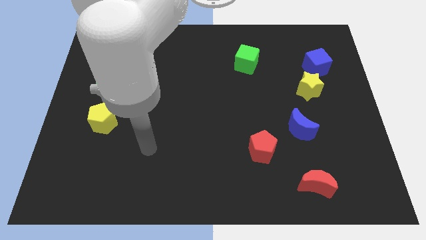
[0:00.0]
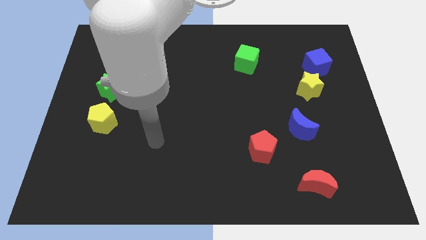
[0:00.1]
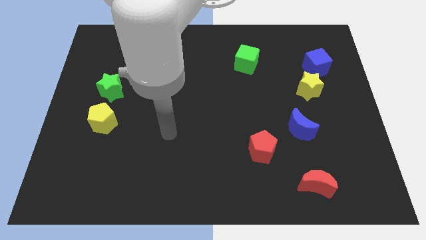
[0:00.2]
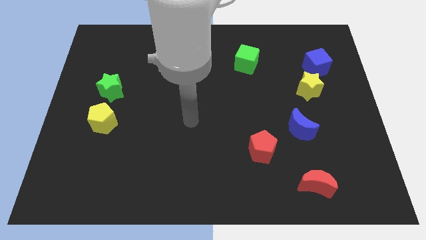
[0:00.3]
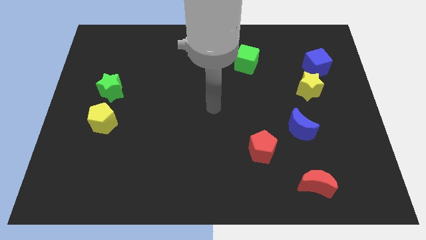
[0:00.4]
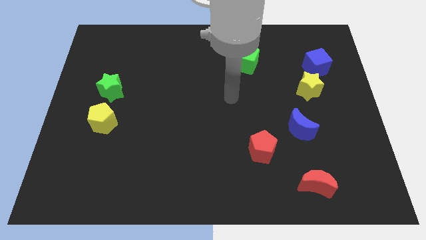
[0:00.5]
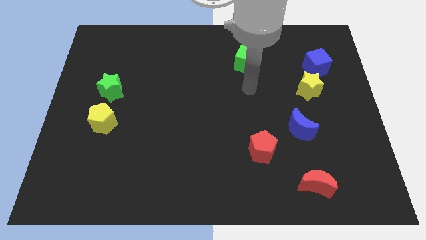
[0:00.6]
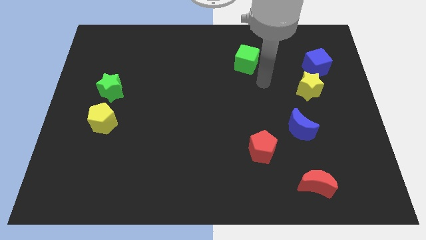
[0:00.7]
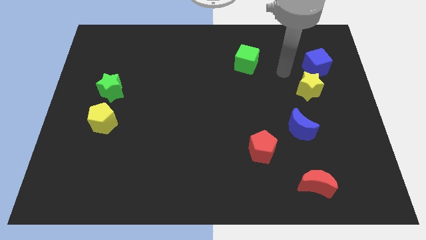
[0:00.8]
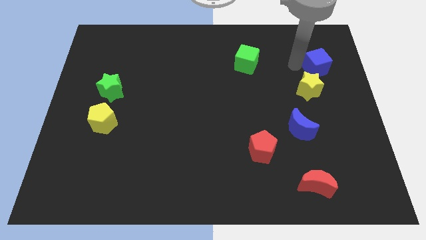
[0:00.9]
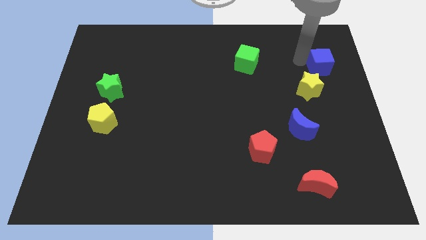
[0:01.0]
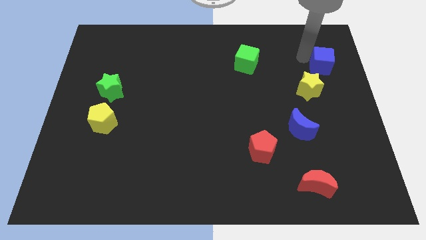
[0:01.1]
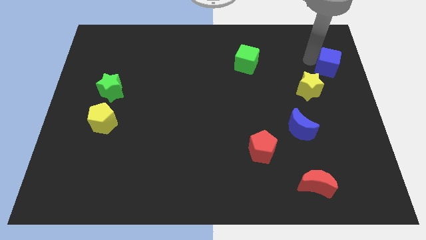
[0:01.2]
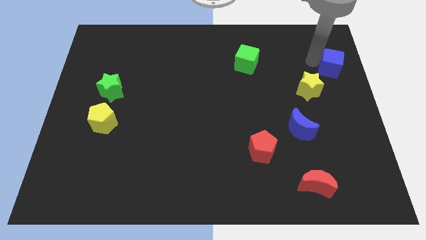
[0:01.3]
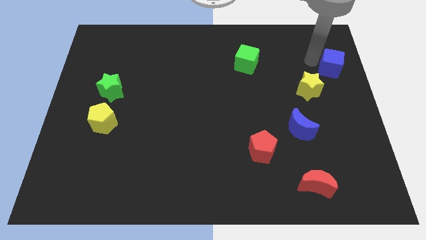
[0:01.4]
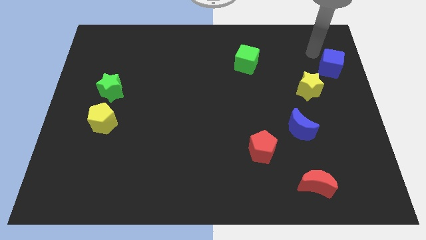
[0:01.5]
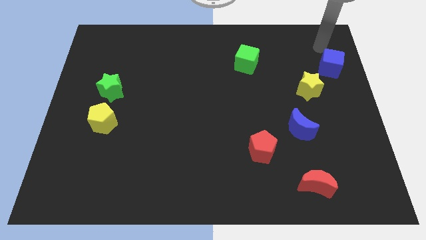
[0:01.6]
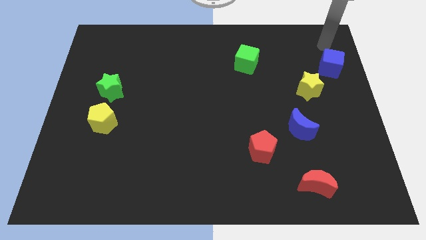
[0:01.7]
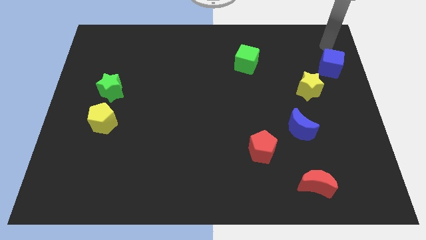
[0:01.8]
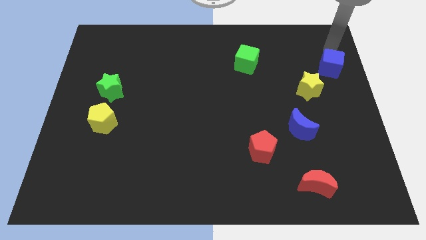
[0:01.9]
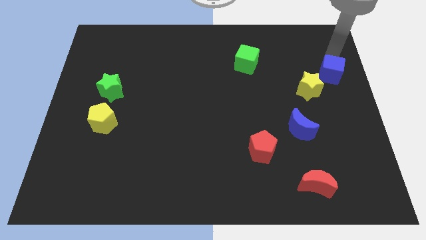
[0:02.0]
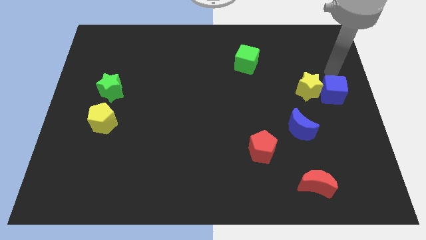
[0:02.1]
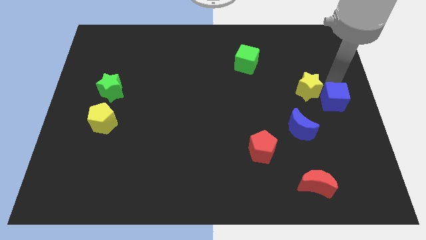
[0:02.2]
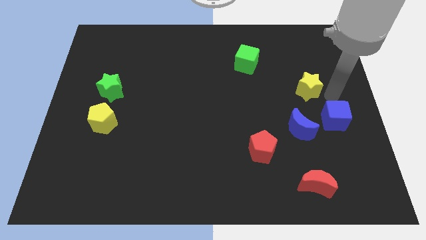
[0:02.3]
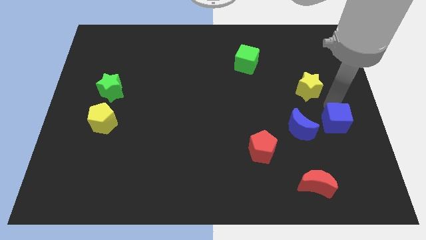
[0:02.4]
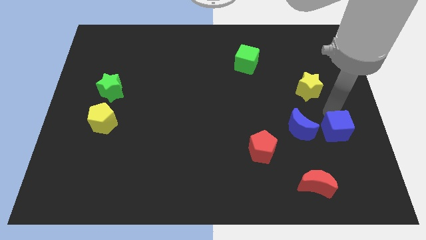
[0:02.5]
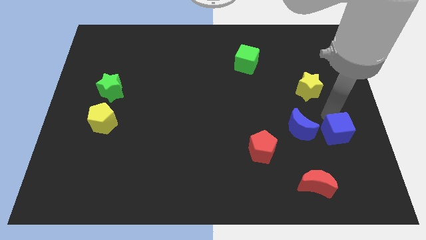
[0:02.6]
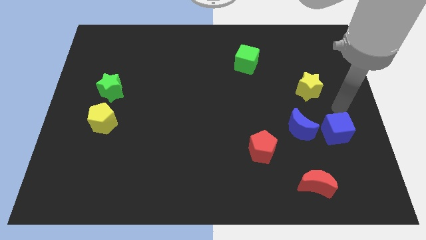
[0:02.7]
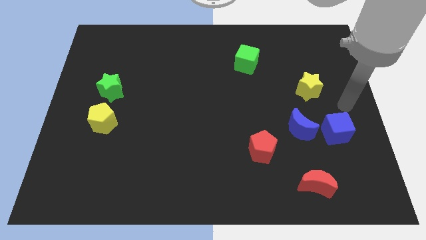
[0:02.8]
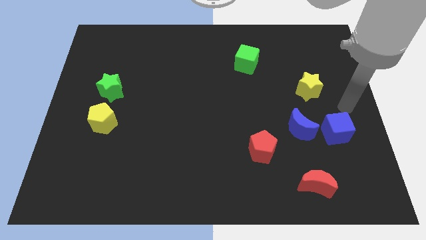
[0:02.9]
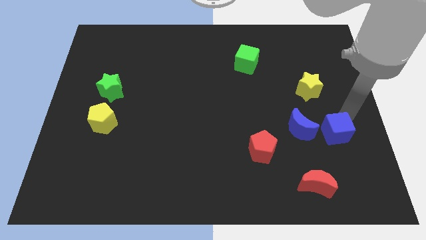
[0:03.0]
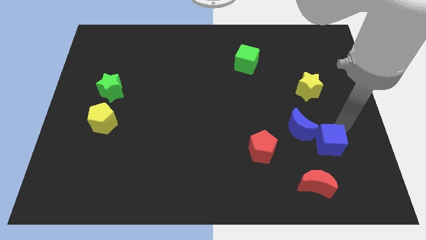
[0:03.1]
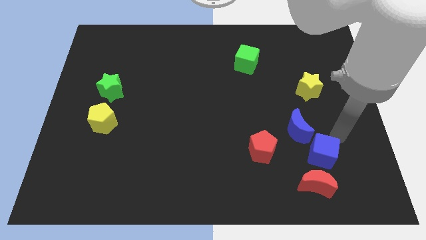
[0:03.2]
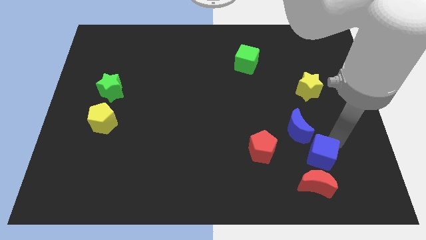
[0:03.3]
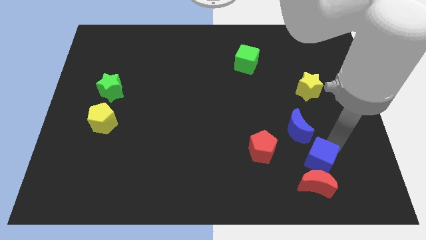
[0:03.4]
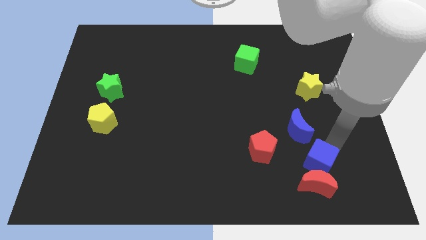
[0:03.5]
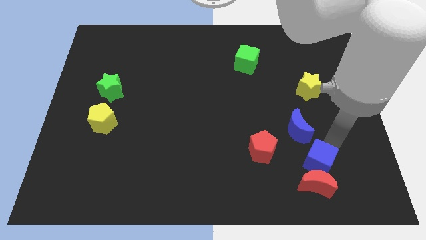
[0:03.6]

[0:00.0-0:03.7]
push the blue cube next to the red moon

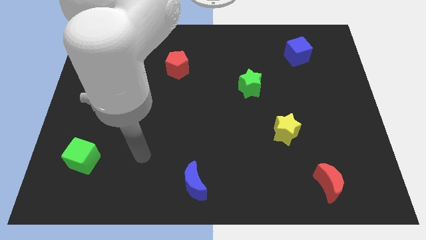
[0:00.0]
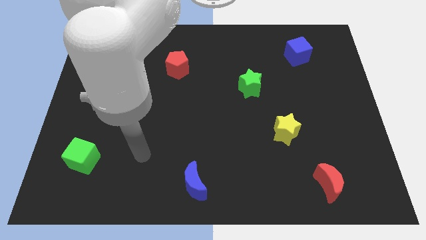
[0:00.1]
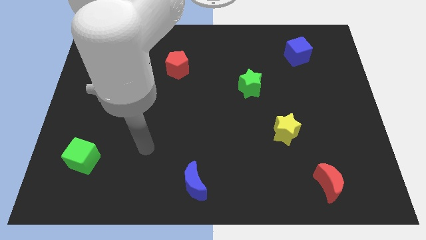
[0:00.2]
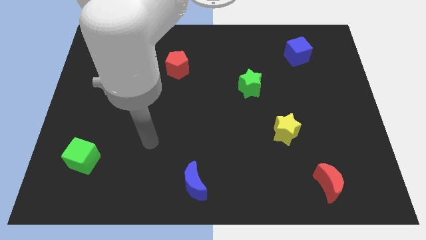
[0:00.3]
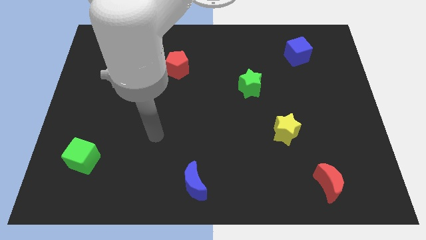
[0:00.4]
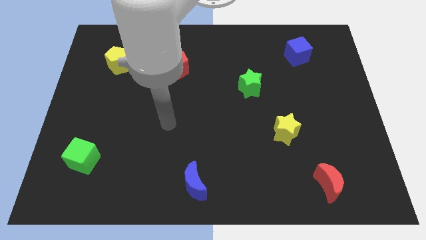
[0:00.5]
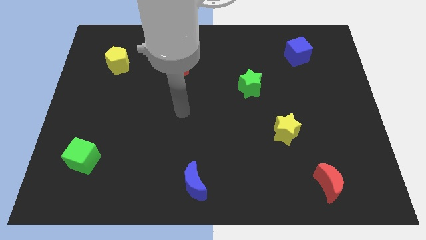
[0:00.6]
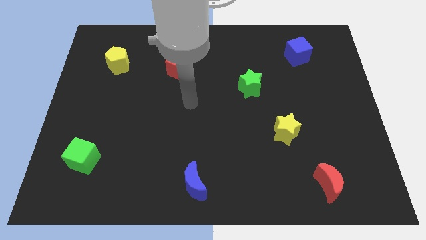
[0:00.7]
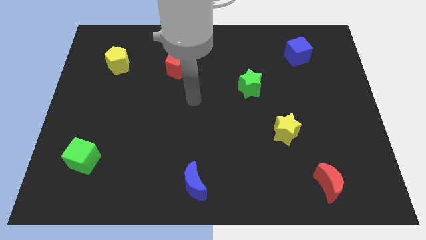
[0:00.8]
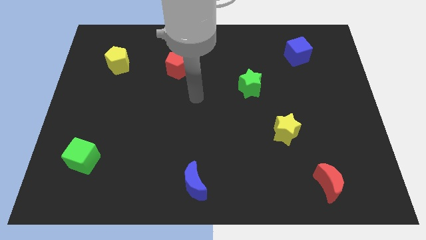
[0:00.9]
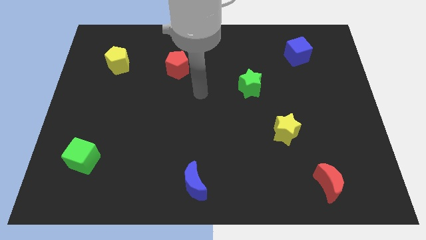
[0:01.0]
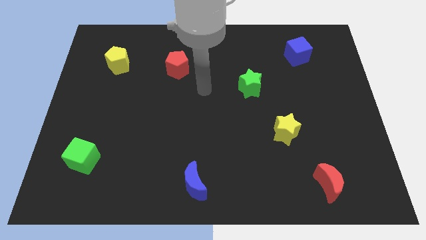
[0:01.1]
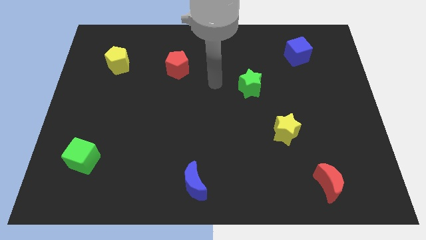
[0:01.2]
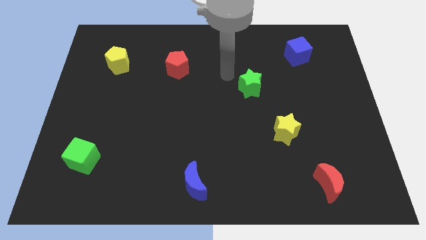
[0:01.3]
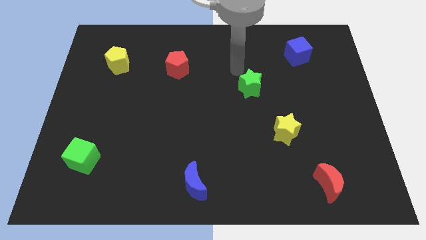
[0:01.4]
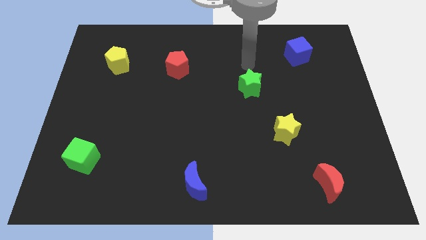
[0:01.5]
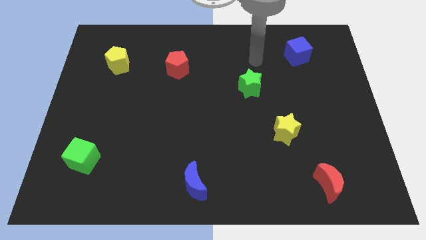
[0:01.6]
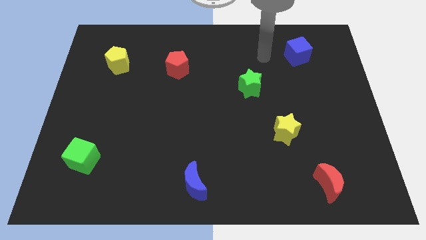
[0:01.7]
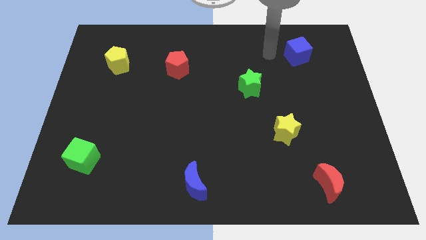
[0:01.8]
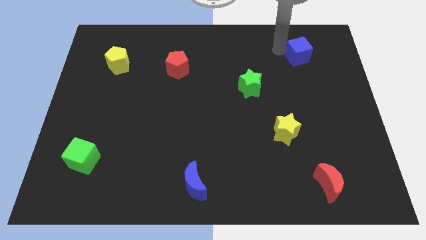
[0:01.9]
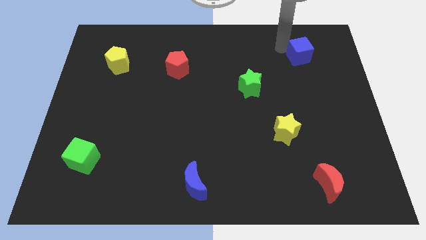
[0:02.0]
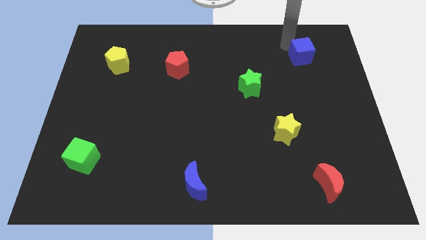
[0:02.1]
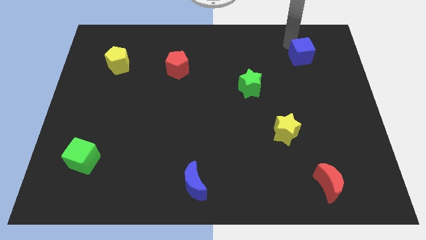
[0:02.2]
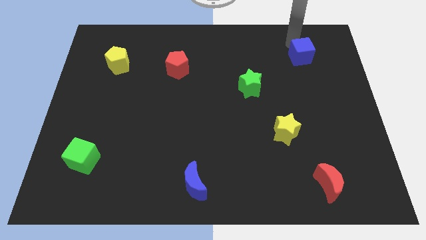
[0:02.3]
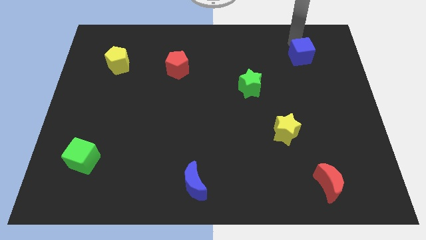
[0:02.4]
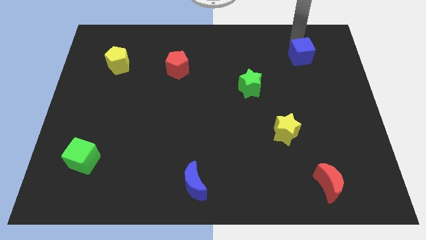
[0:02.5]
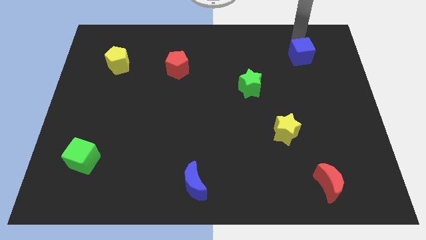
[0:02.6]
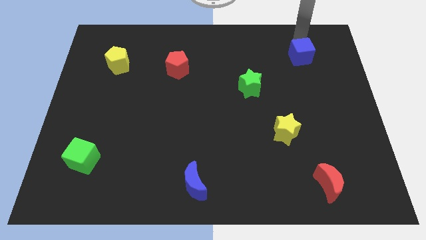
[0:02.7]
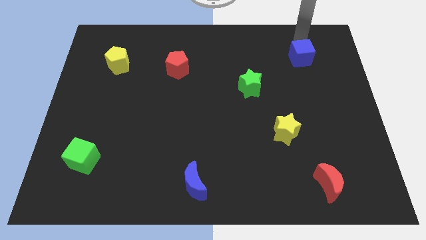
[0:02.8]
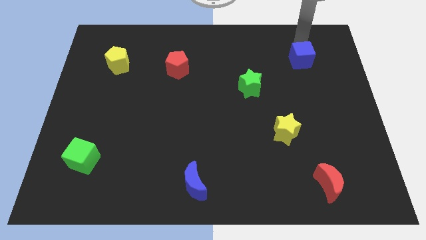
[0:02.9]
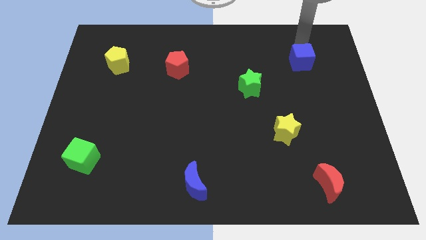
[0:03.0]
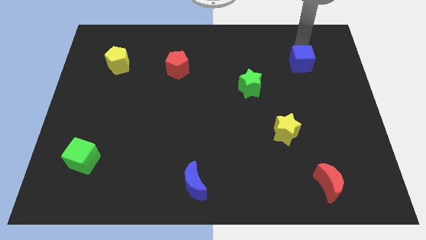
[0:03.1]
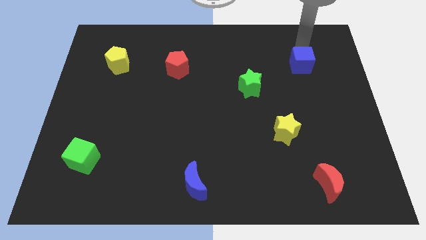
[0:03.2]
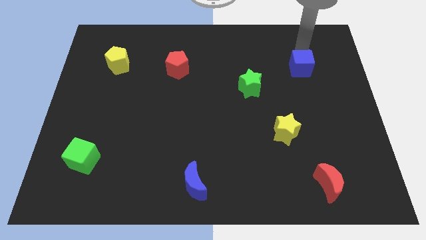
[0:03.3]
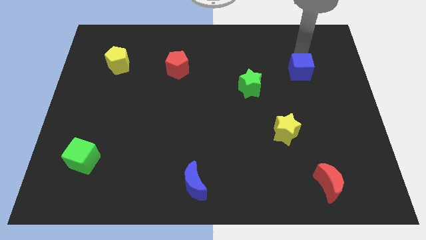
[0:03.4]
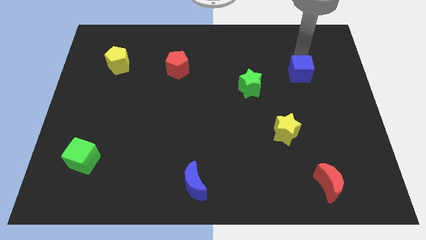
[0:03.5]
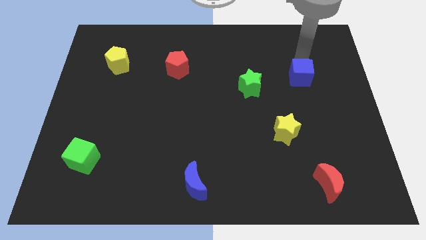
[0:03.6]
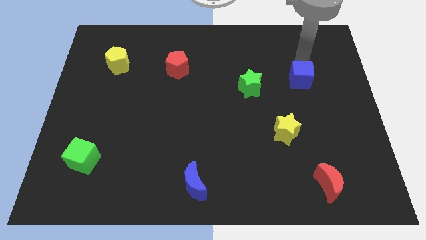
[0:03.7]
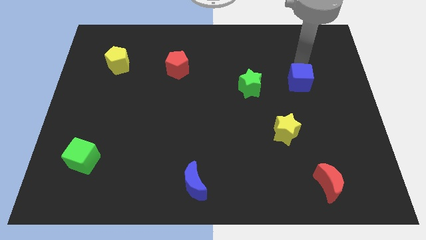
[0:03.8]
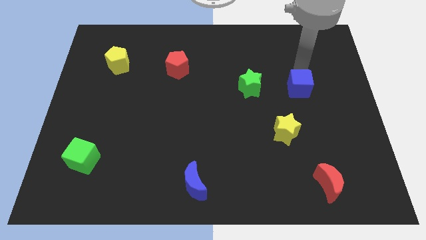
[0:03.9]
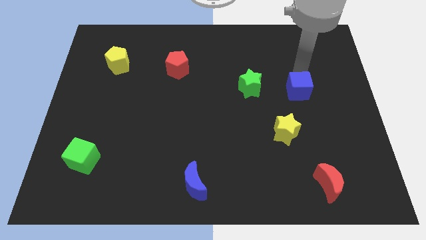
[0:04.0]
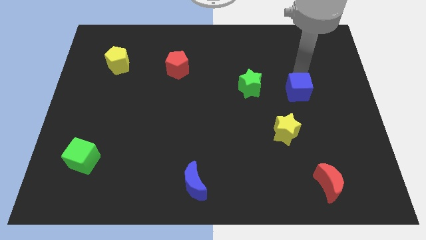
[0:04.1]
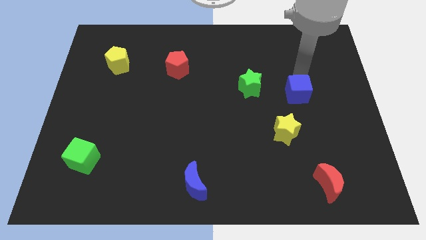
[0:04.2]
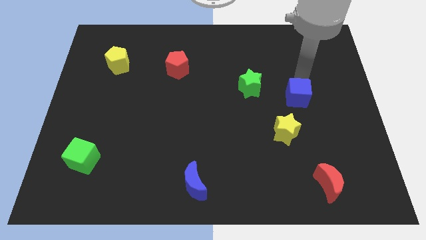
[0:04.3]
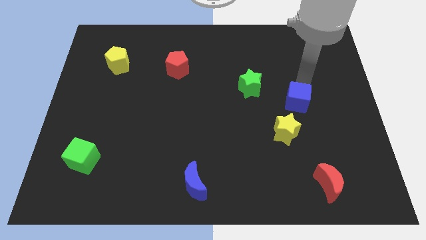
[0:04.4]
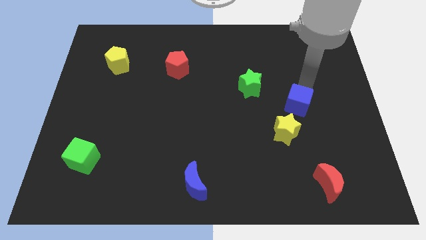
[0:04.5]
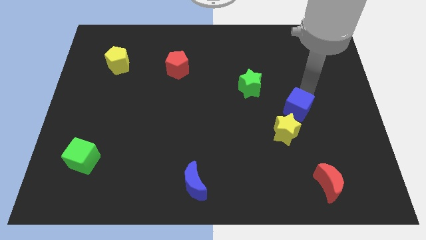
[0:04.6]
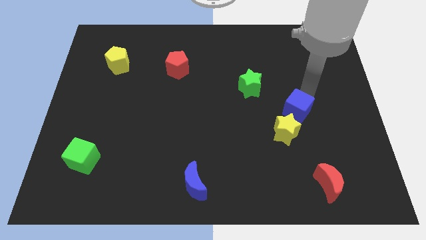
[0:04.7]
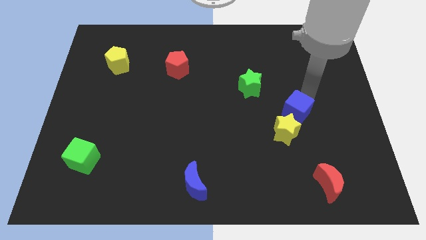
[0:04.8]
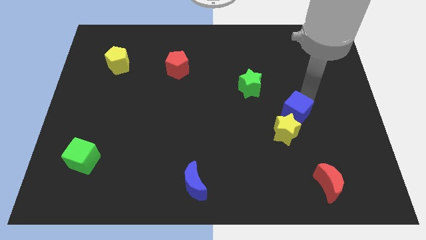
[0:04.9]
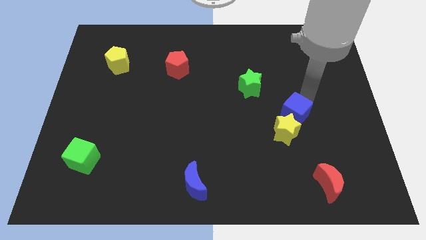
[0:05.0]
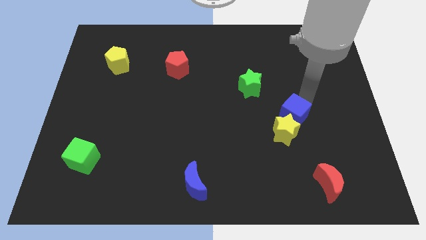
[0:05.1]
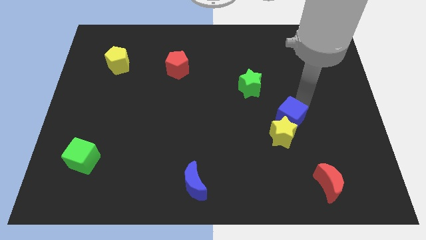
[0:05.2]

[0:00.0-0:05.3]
slide the blue cube next to the yellow star

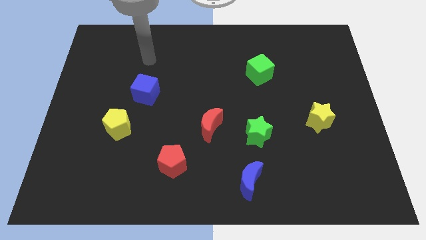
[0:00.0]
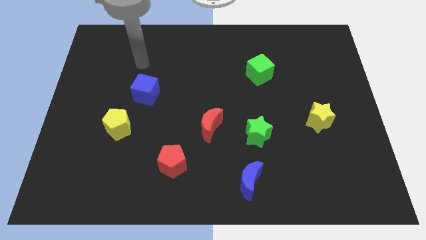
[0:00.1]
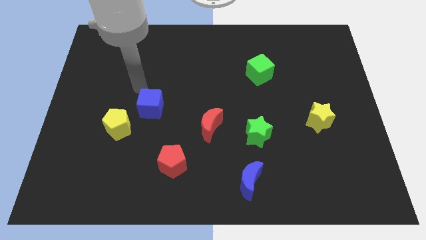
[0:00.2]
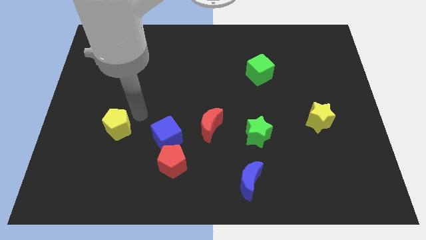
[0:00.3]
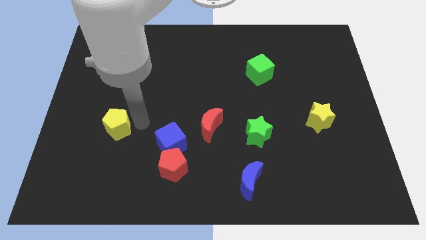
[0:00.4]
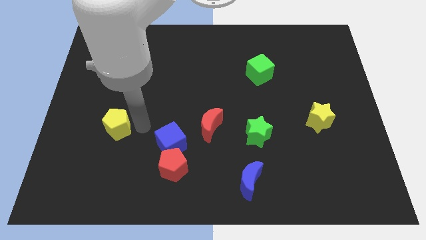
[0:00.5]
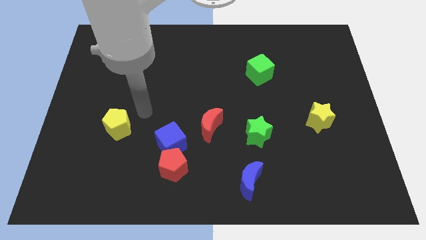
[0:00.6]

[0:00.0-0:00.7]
push the blue cube close to the red pentagon
